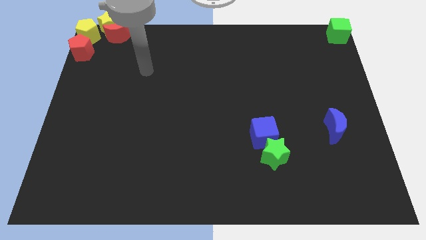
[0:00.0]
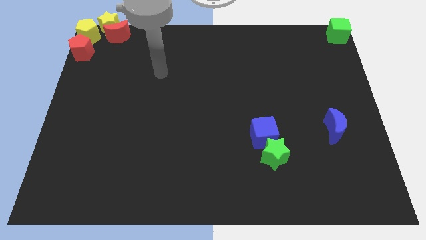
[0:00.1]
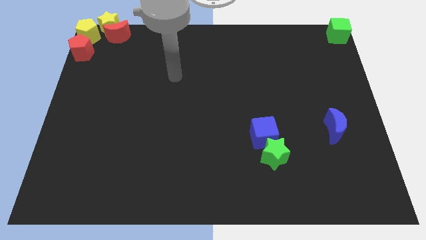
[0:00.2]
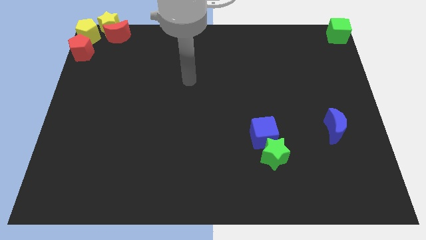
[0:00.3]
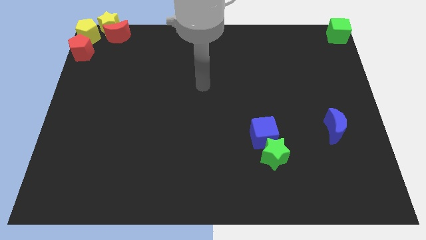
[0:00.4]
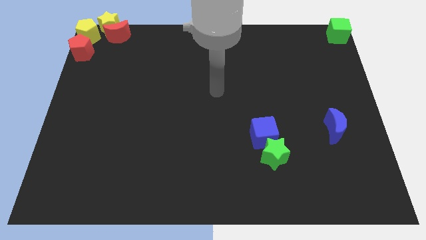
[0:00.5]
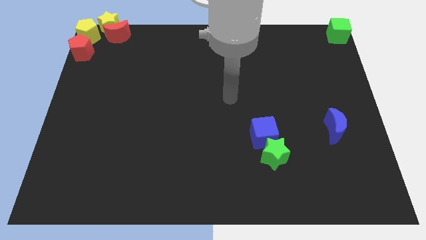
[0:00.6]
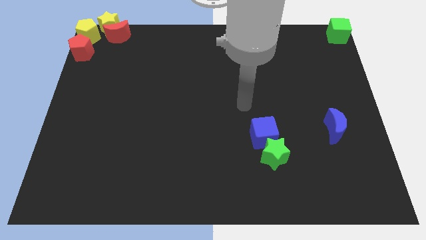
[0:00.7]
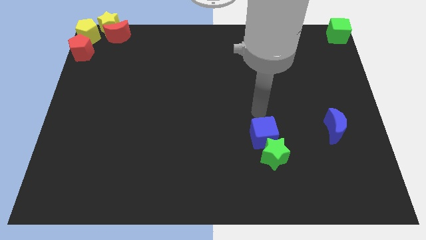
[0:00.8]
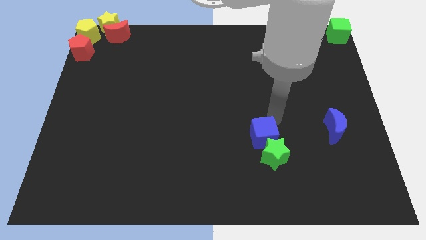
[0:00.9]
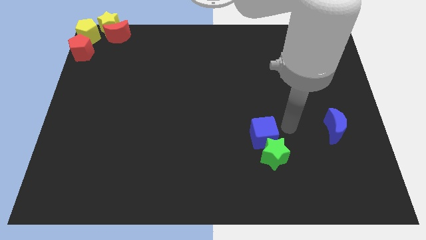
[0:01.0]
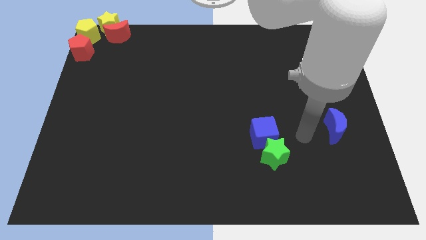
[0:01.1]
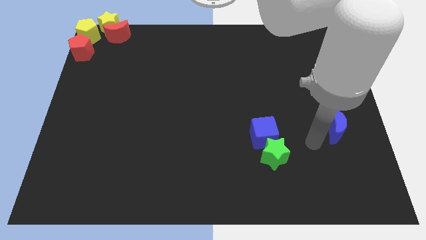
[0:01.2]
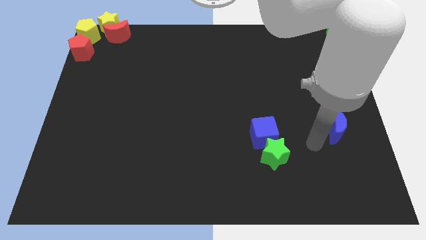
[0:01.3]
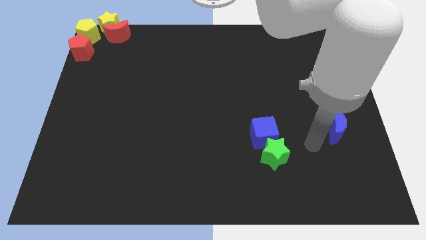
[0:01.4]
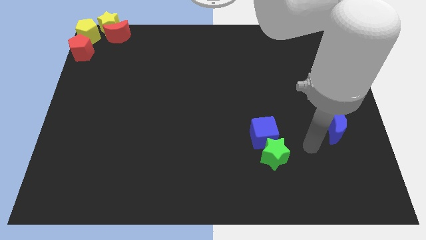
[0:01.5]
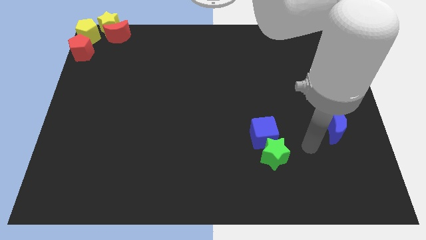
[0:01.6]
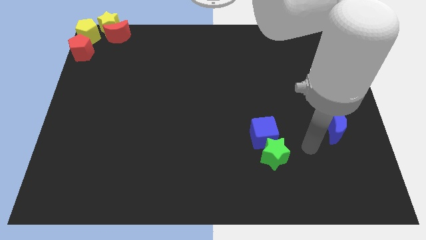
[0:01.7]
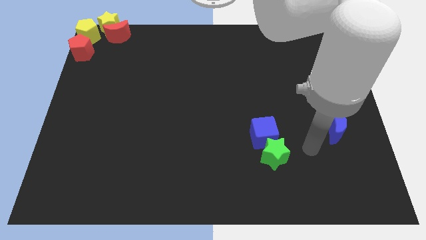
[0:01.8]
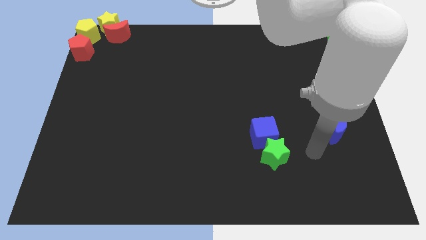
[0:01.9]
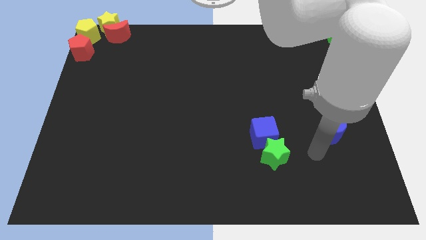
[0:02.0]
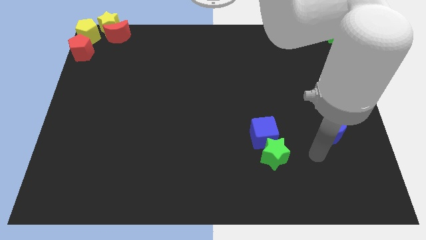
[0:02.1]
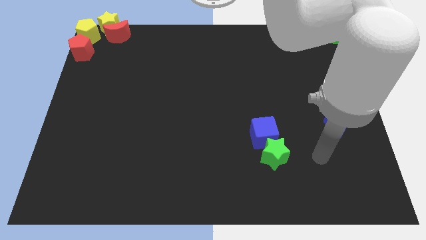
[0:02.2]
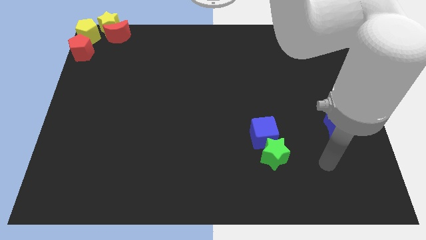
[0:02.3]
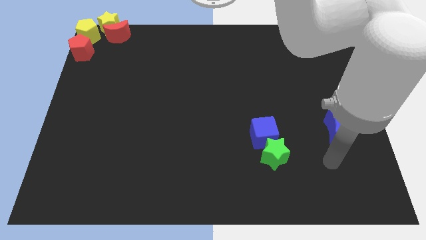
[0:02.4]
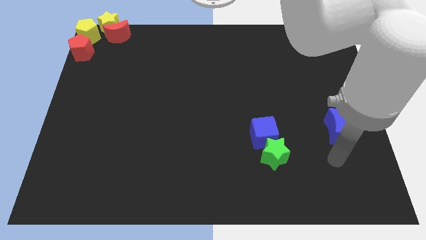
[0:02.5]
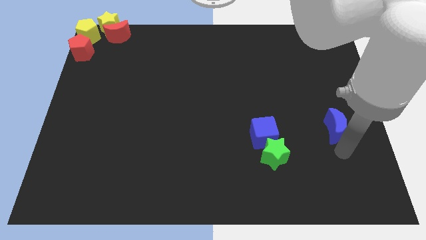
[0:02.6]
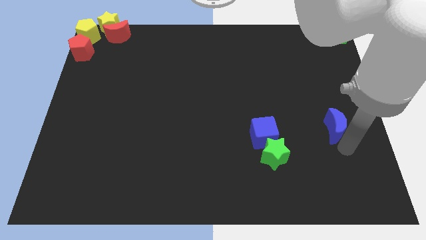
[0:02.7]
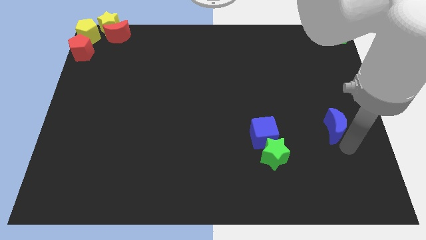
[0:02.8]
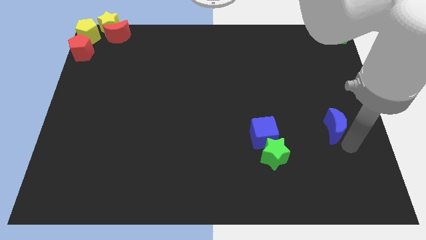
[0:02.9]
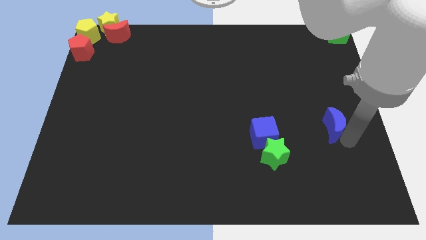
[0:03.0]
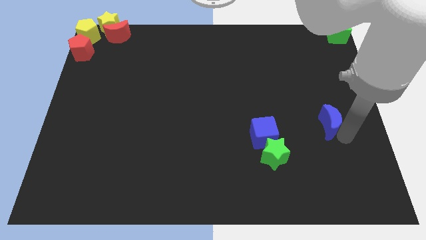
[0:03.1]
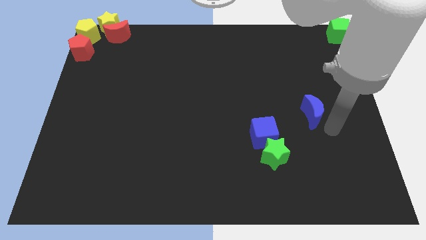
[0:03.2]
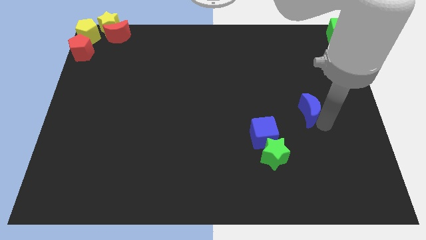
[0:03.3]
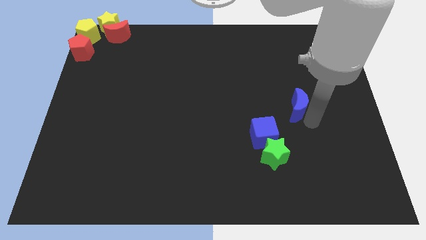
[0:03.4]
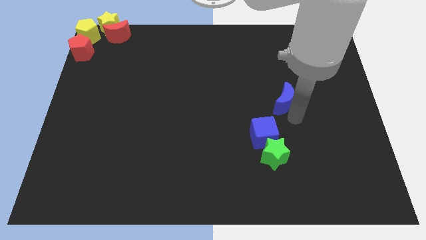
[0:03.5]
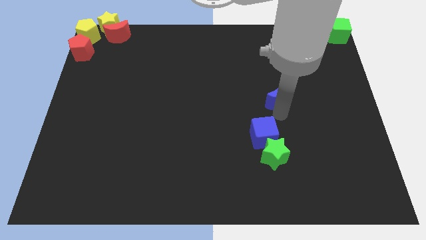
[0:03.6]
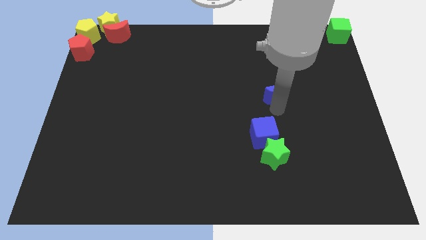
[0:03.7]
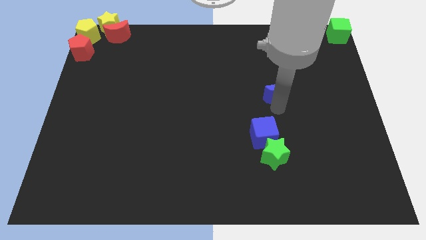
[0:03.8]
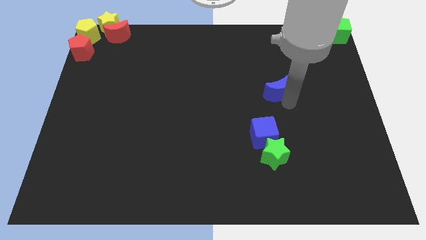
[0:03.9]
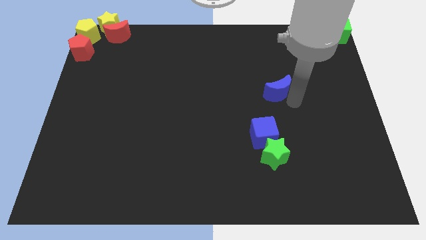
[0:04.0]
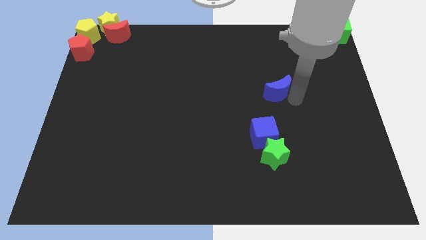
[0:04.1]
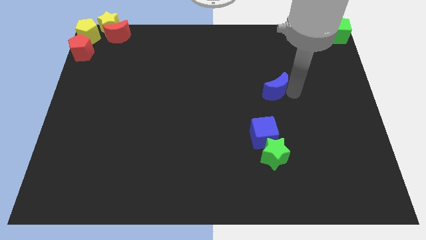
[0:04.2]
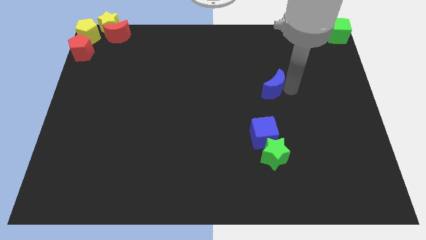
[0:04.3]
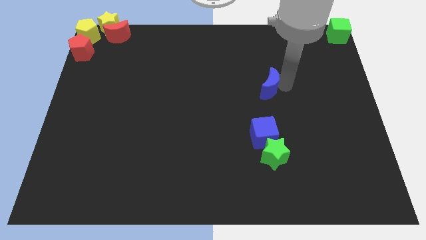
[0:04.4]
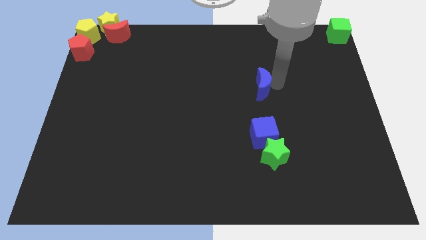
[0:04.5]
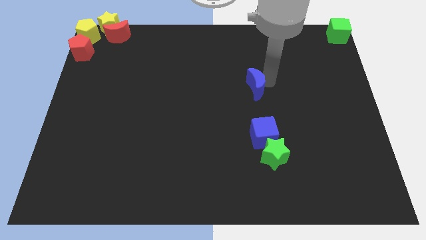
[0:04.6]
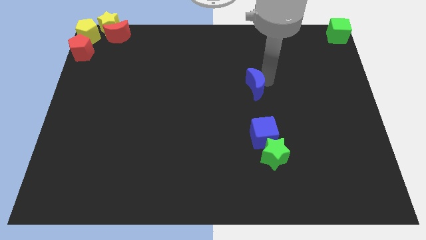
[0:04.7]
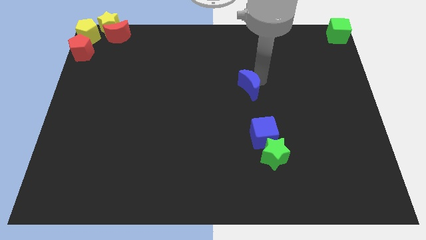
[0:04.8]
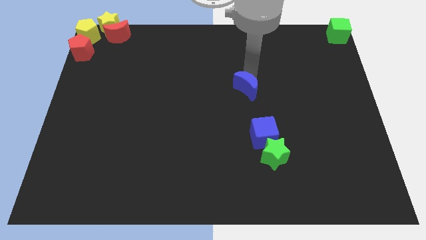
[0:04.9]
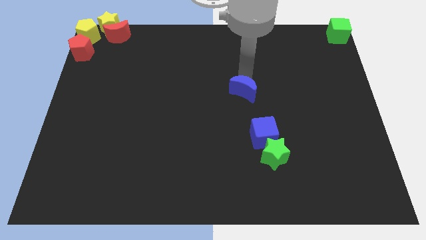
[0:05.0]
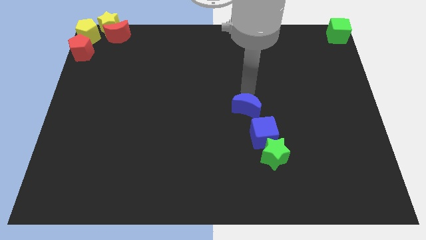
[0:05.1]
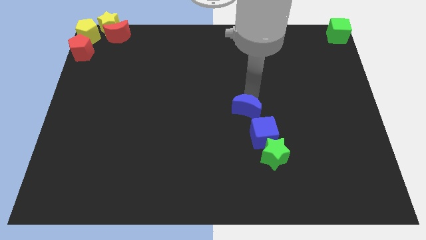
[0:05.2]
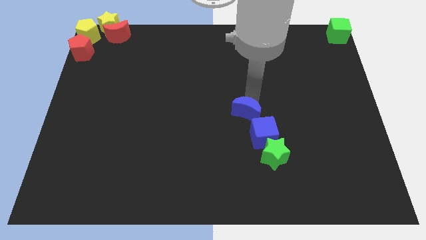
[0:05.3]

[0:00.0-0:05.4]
place the blue crescent above the blue cube

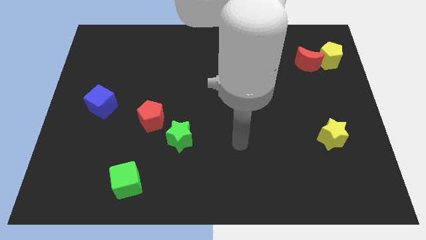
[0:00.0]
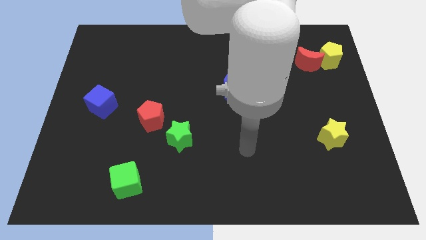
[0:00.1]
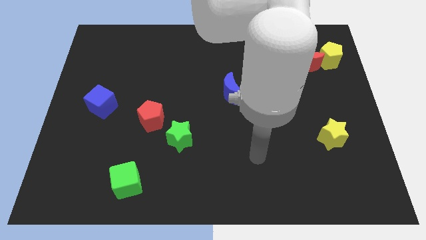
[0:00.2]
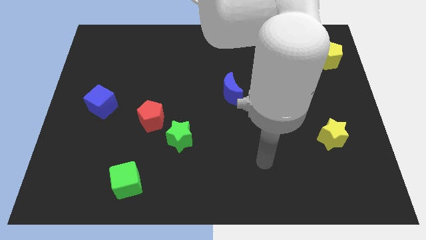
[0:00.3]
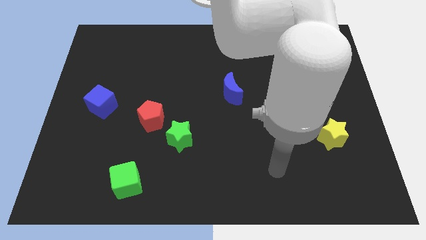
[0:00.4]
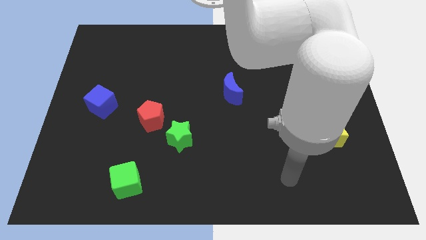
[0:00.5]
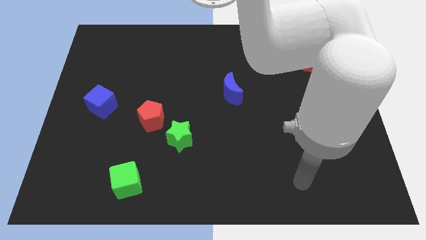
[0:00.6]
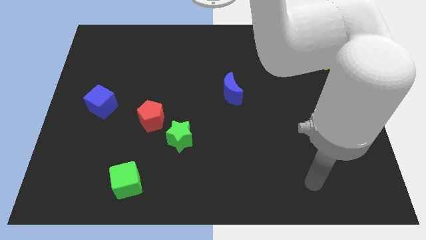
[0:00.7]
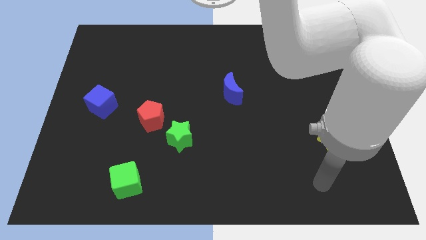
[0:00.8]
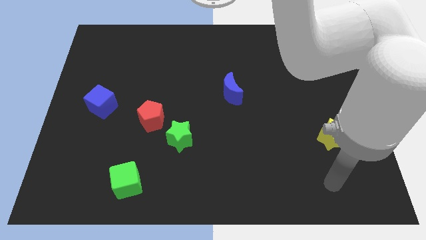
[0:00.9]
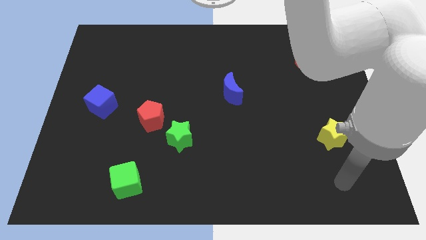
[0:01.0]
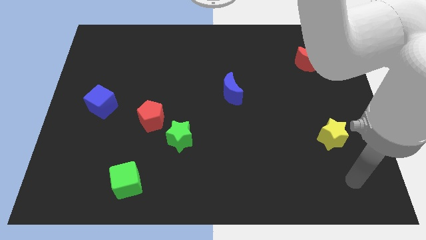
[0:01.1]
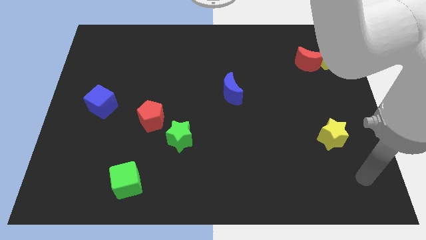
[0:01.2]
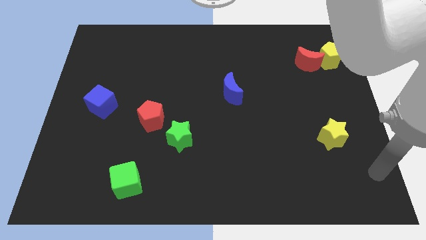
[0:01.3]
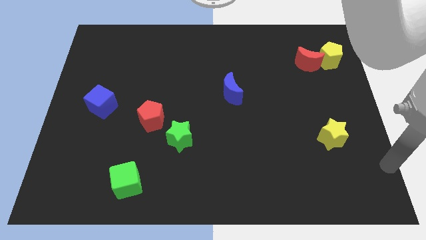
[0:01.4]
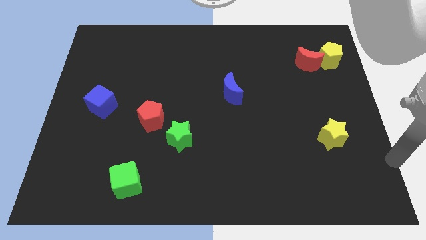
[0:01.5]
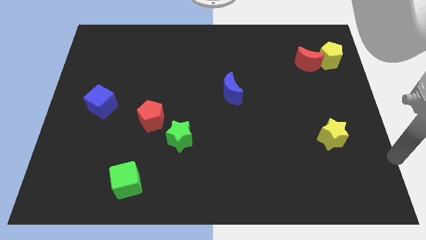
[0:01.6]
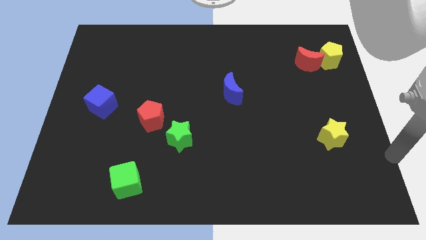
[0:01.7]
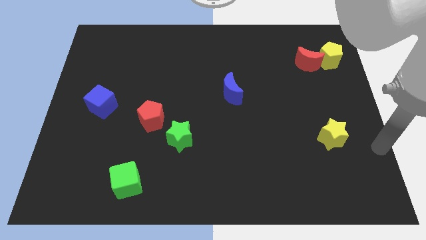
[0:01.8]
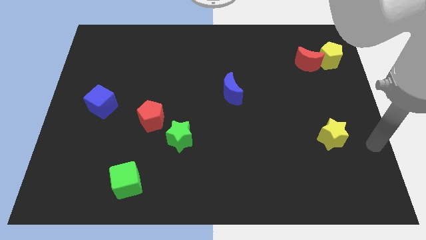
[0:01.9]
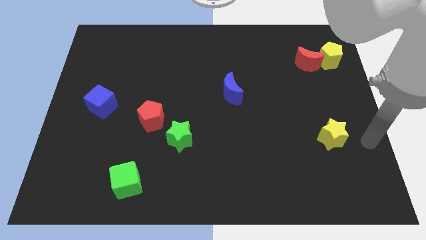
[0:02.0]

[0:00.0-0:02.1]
point your arm to the right of yellow star

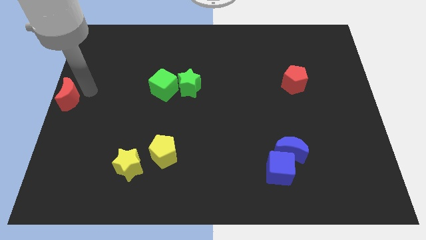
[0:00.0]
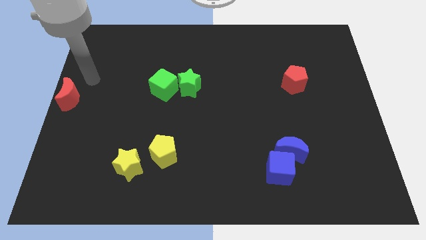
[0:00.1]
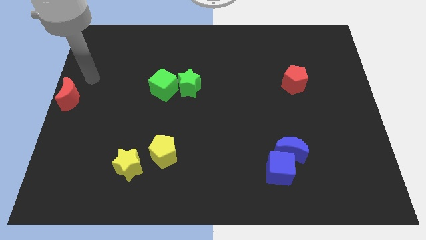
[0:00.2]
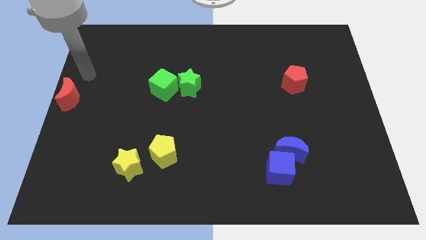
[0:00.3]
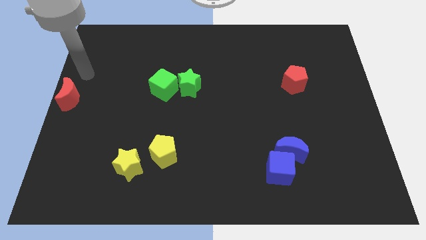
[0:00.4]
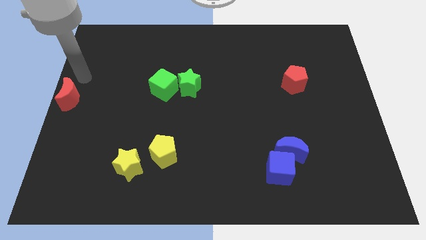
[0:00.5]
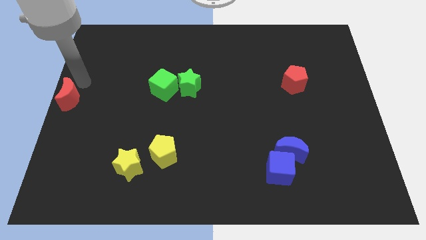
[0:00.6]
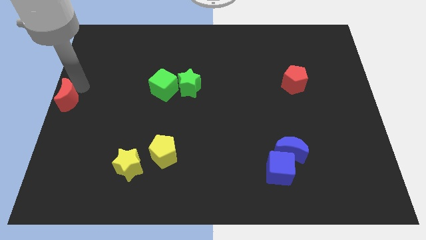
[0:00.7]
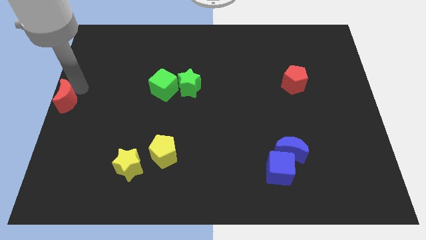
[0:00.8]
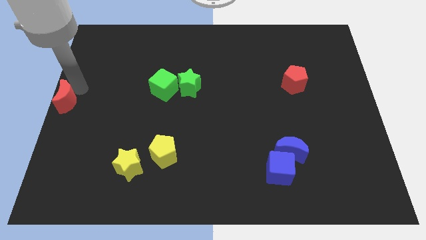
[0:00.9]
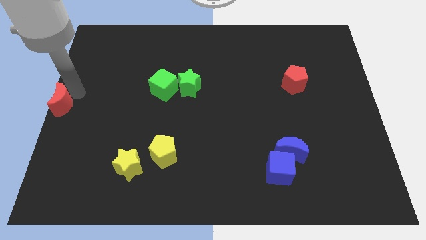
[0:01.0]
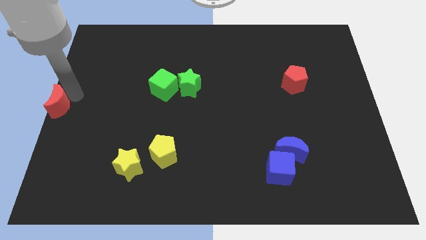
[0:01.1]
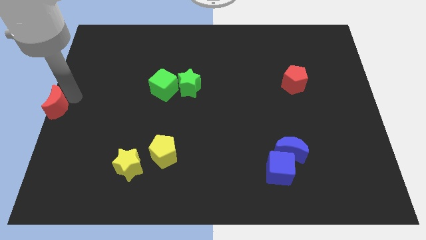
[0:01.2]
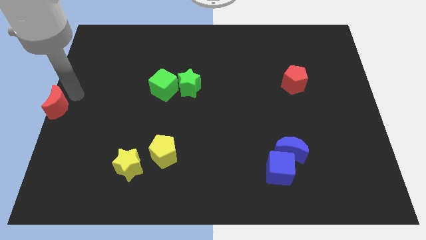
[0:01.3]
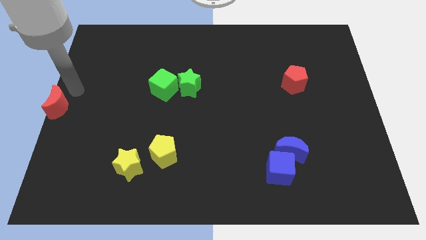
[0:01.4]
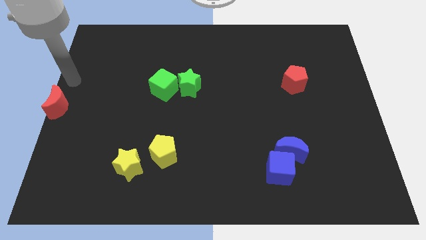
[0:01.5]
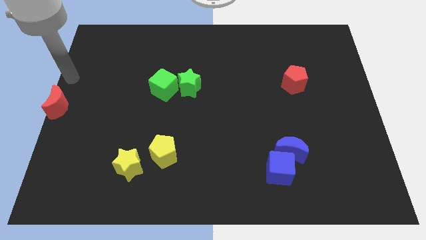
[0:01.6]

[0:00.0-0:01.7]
push the red crescent slightly
